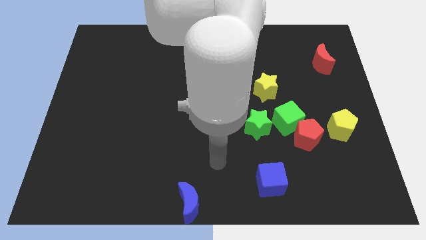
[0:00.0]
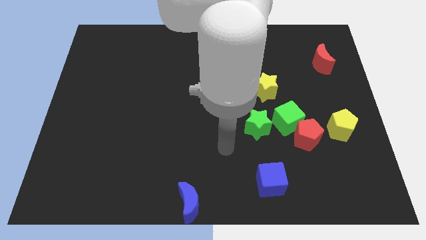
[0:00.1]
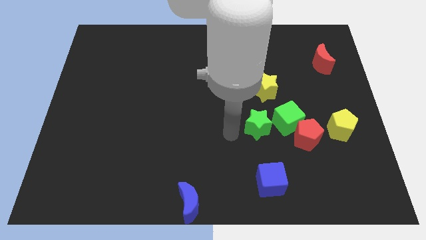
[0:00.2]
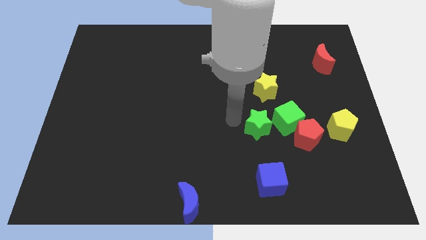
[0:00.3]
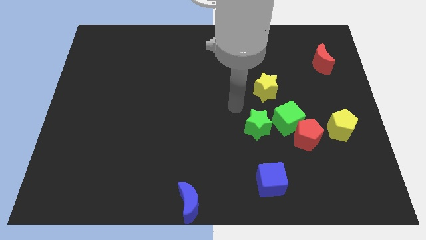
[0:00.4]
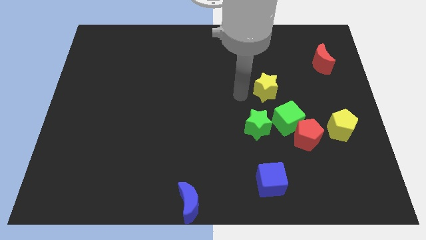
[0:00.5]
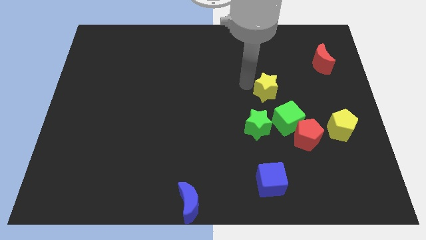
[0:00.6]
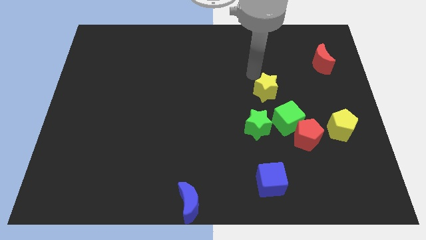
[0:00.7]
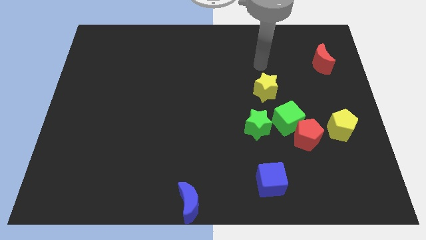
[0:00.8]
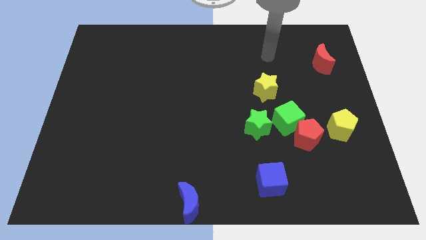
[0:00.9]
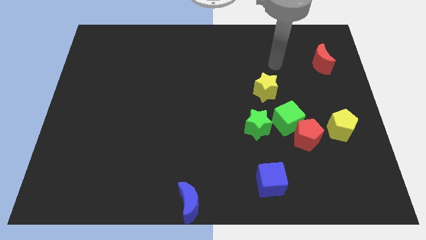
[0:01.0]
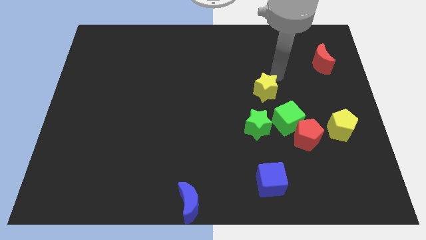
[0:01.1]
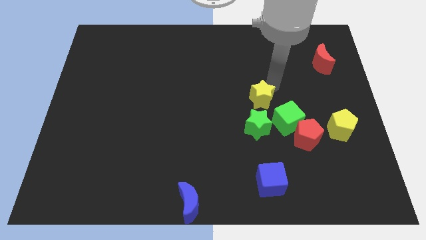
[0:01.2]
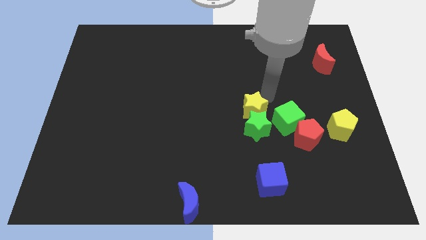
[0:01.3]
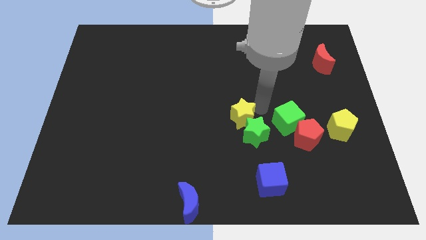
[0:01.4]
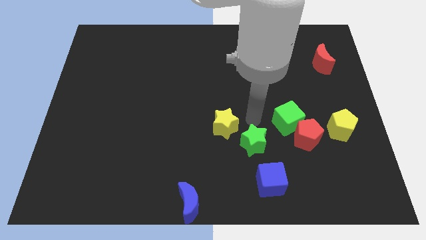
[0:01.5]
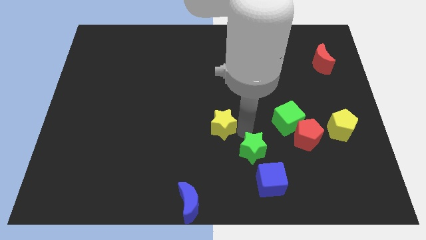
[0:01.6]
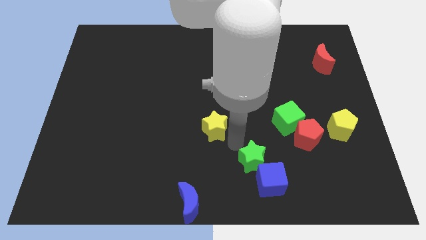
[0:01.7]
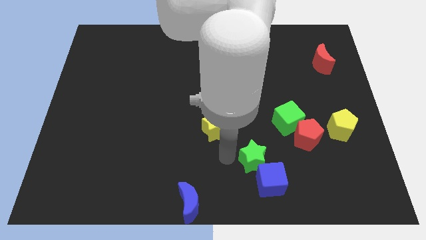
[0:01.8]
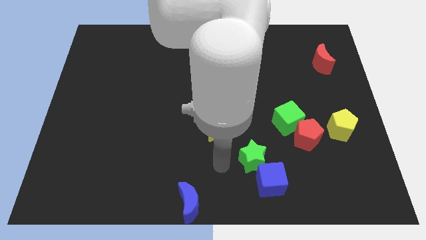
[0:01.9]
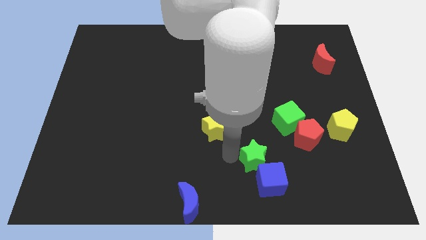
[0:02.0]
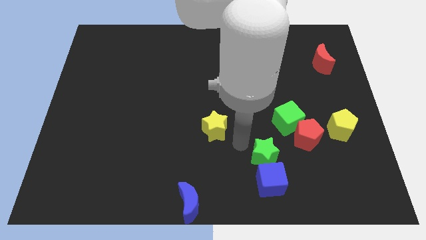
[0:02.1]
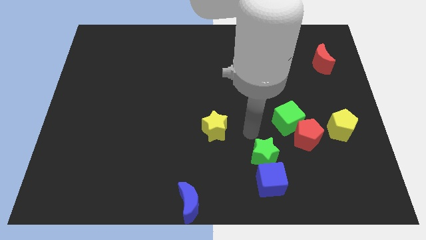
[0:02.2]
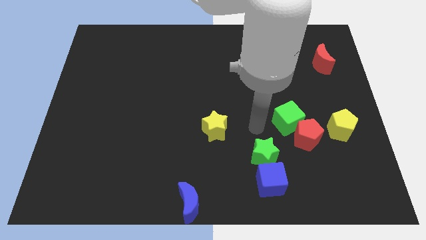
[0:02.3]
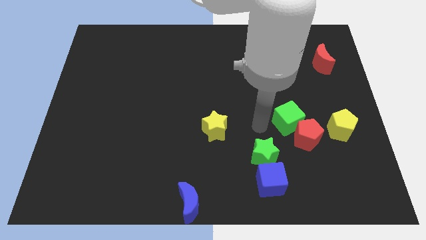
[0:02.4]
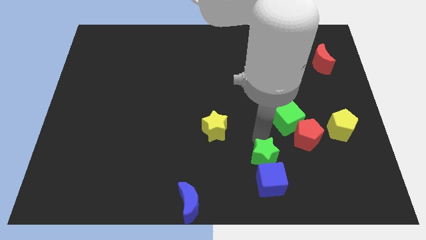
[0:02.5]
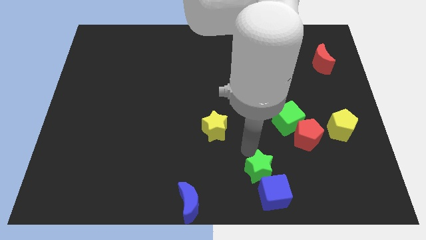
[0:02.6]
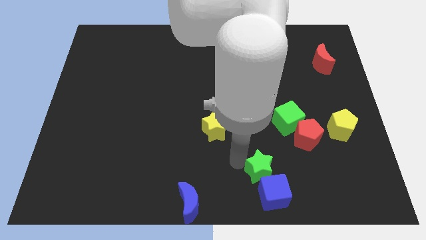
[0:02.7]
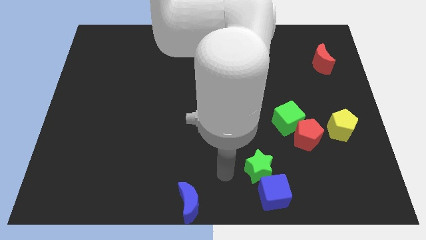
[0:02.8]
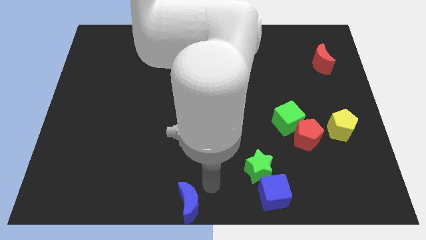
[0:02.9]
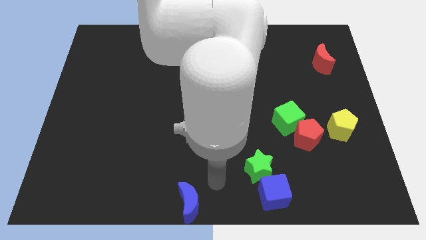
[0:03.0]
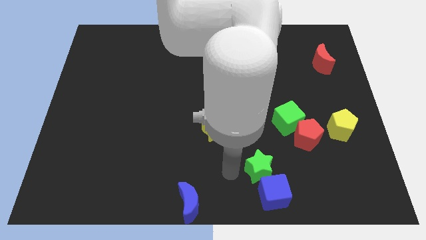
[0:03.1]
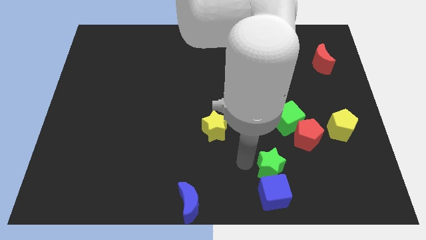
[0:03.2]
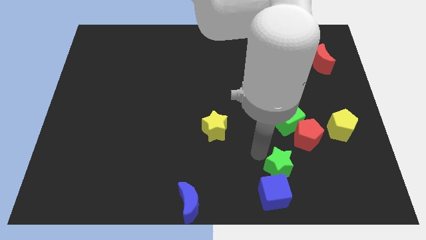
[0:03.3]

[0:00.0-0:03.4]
separate the stars

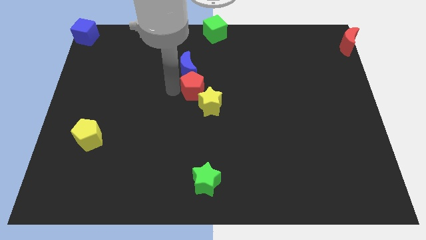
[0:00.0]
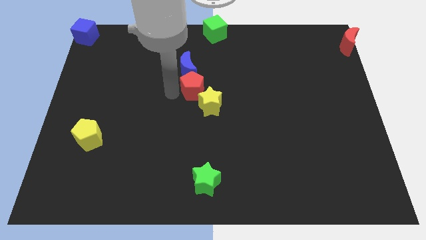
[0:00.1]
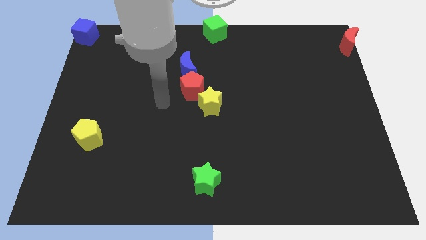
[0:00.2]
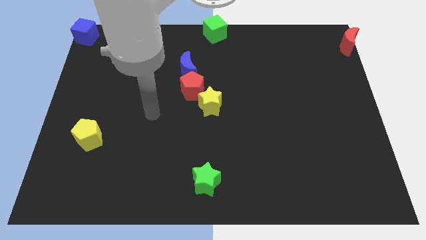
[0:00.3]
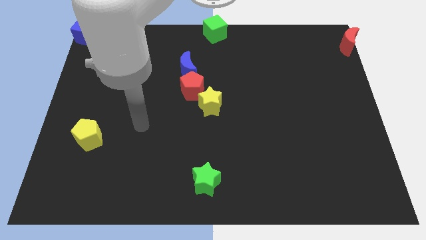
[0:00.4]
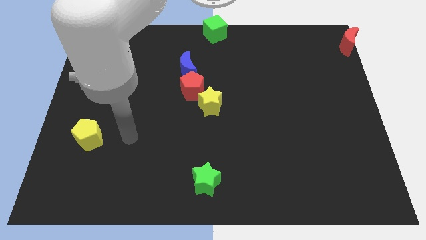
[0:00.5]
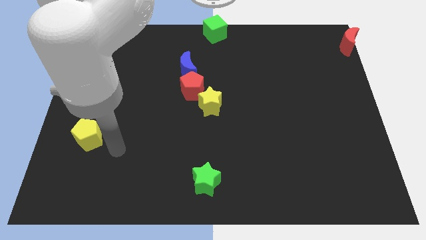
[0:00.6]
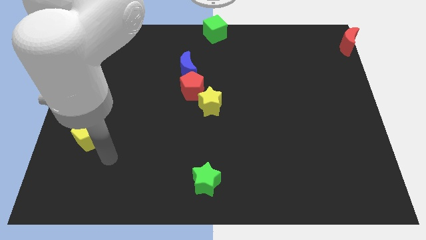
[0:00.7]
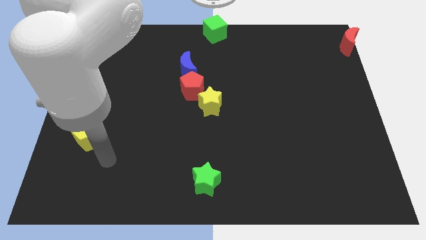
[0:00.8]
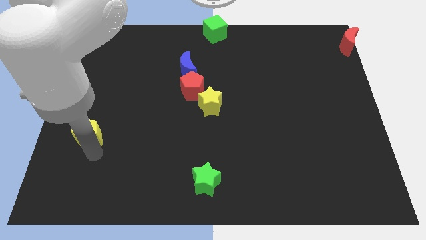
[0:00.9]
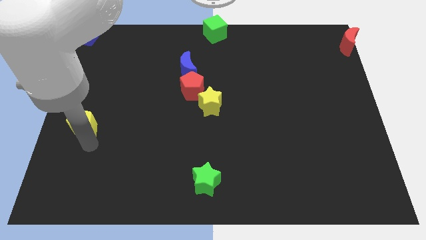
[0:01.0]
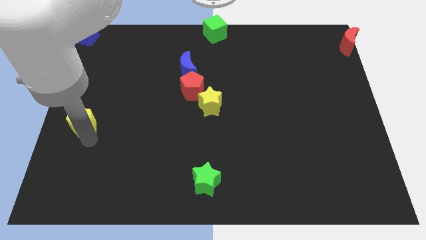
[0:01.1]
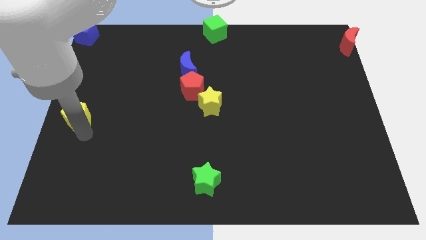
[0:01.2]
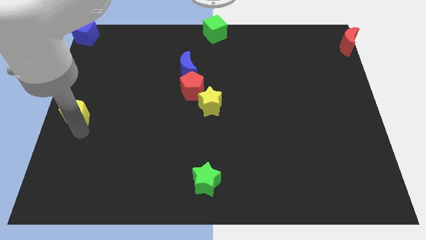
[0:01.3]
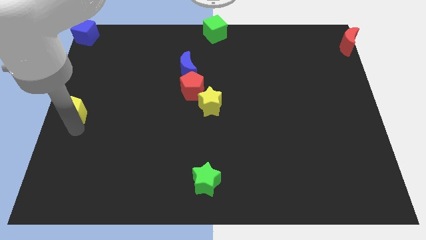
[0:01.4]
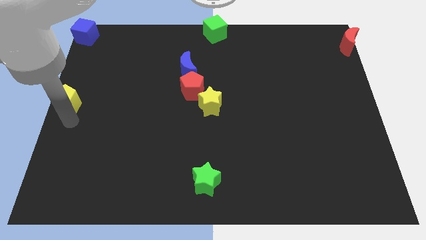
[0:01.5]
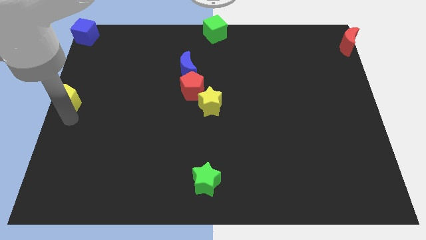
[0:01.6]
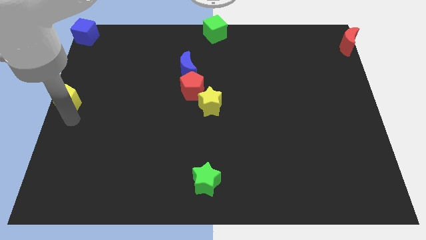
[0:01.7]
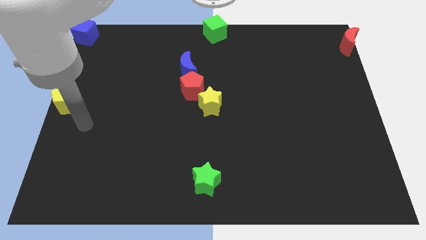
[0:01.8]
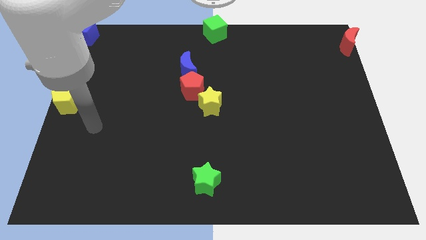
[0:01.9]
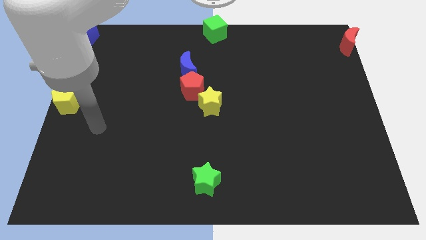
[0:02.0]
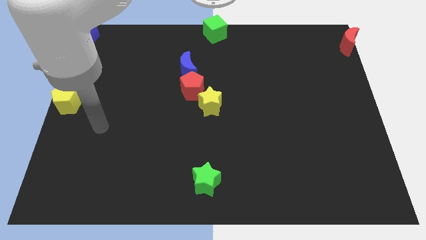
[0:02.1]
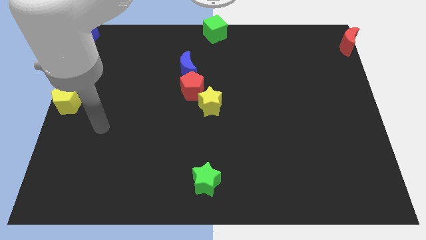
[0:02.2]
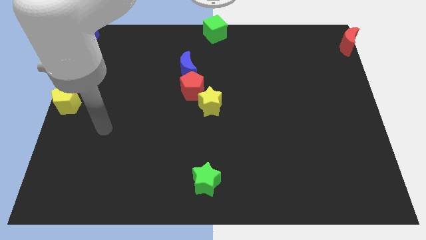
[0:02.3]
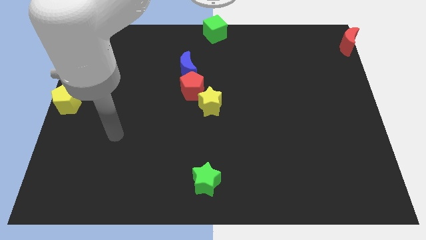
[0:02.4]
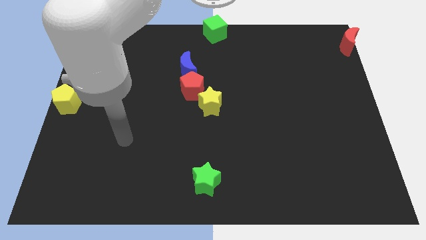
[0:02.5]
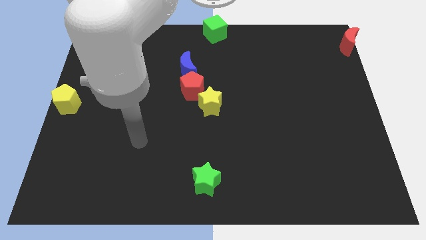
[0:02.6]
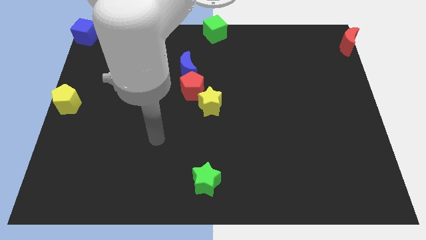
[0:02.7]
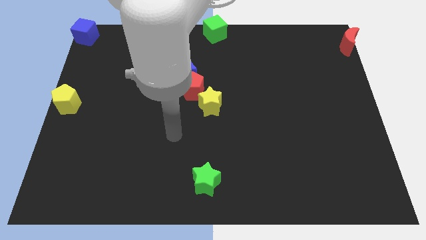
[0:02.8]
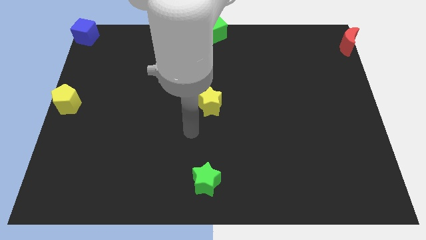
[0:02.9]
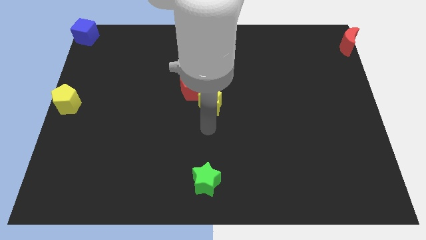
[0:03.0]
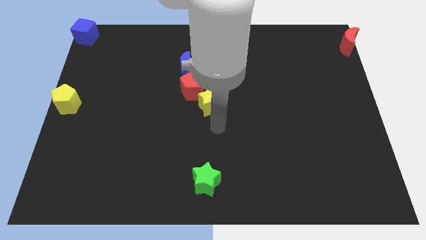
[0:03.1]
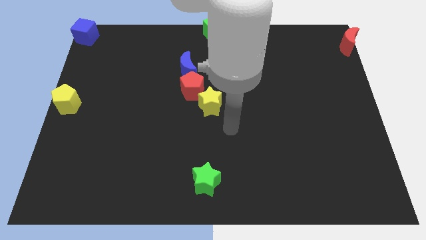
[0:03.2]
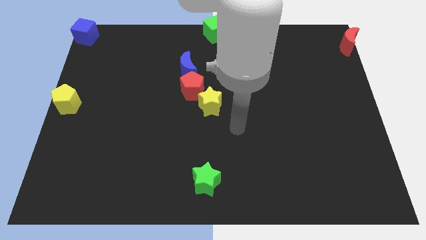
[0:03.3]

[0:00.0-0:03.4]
place the yellow pentagon below the blue cube

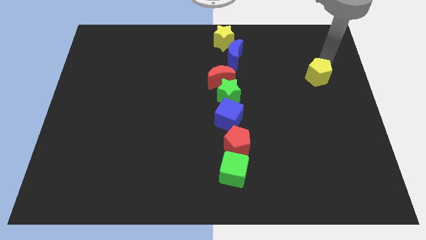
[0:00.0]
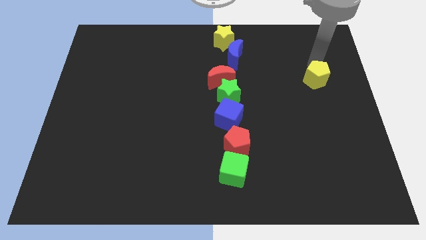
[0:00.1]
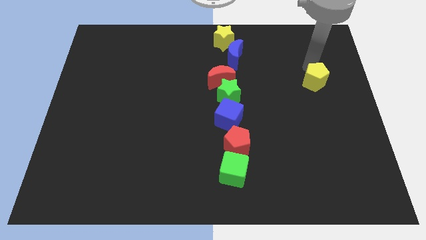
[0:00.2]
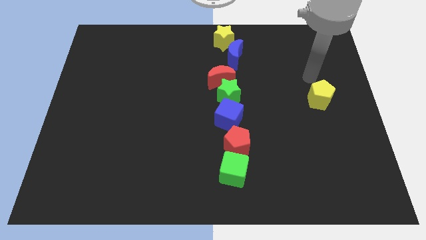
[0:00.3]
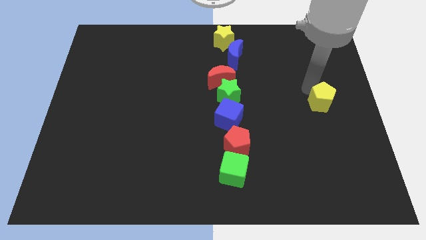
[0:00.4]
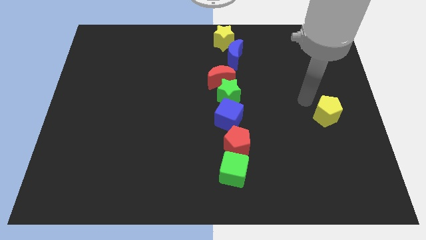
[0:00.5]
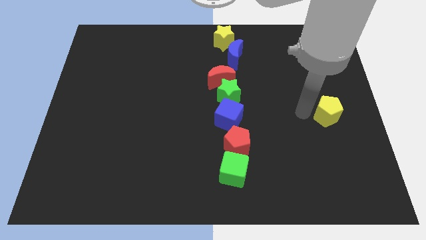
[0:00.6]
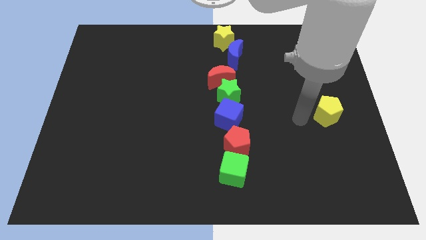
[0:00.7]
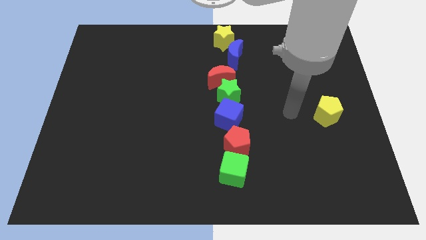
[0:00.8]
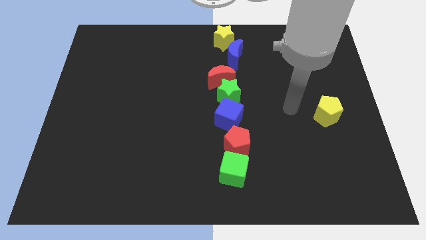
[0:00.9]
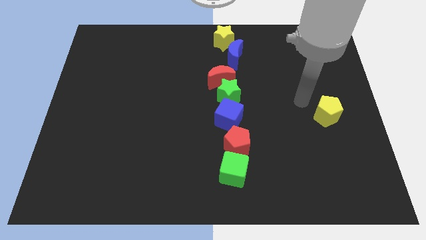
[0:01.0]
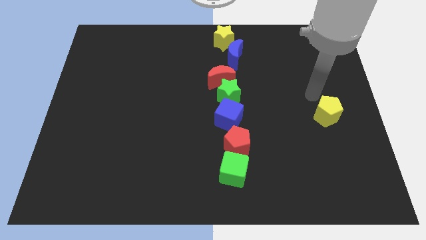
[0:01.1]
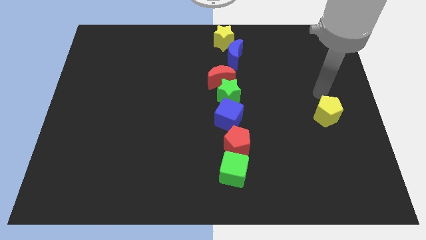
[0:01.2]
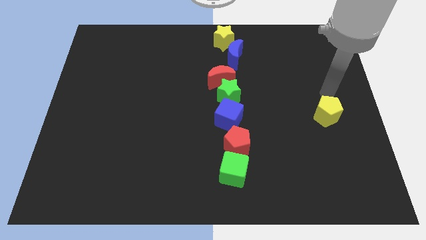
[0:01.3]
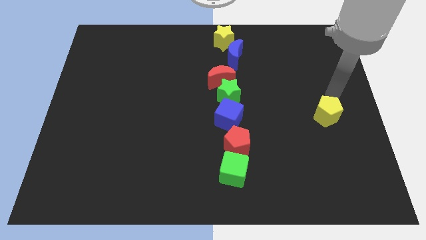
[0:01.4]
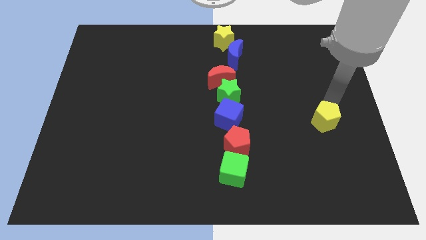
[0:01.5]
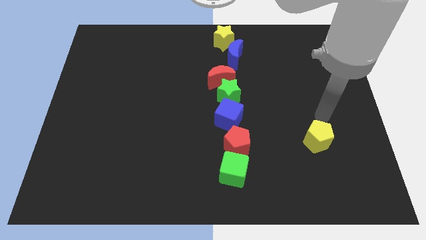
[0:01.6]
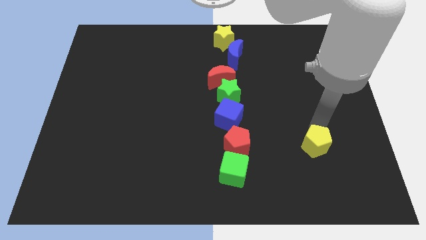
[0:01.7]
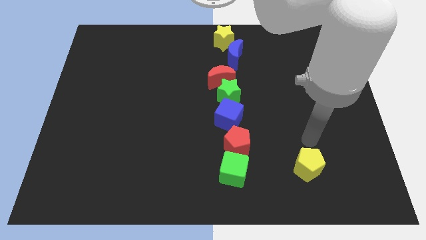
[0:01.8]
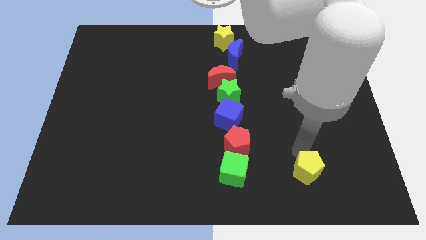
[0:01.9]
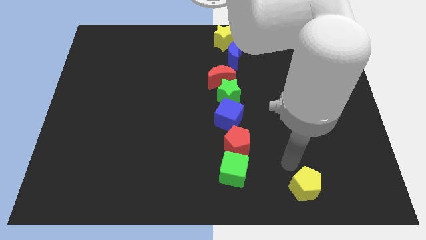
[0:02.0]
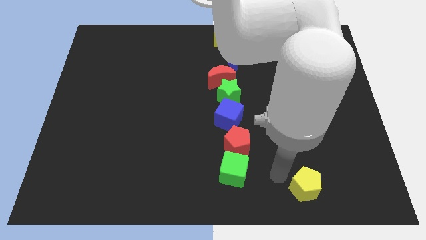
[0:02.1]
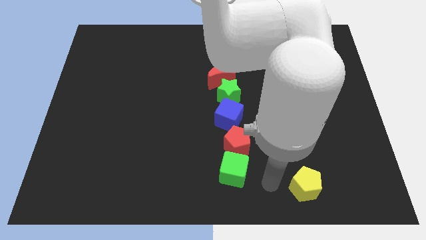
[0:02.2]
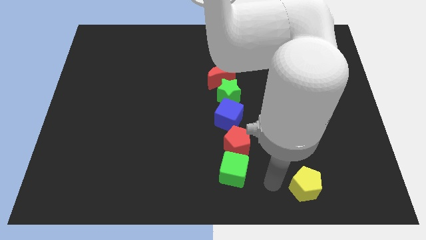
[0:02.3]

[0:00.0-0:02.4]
push the yellow pentagon to the right of green cube
